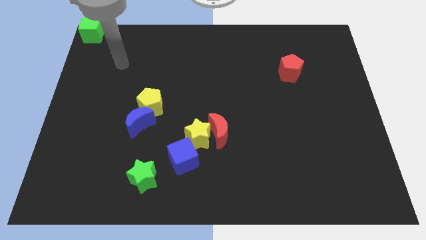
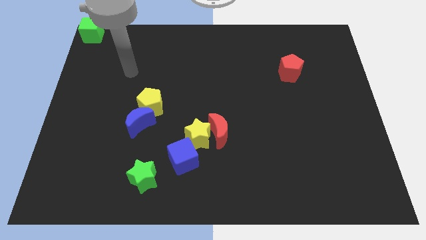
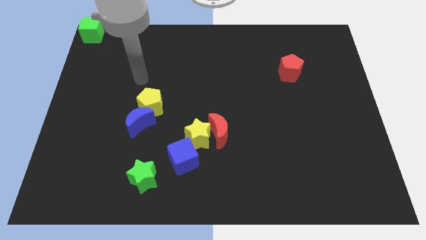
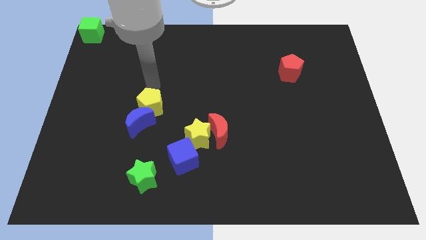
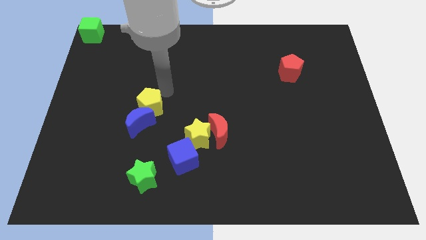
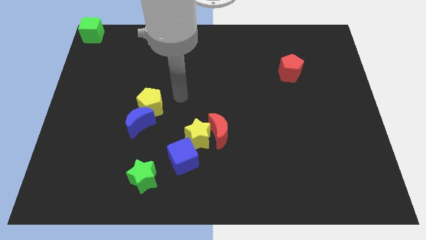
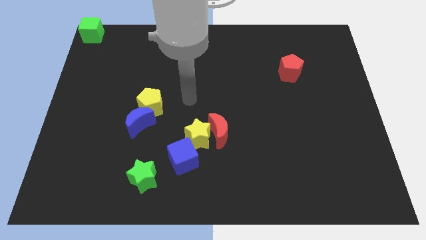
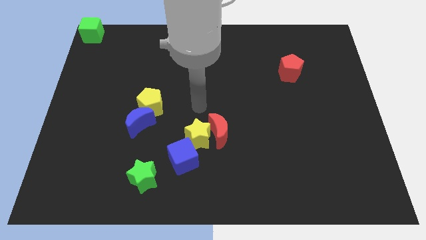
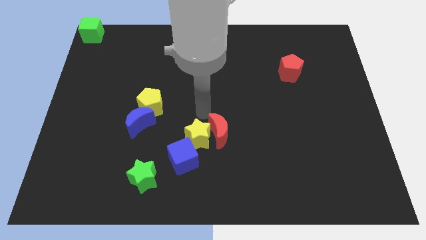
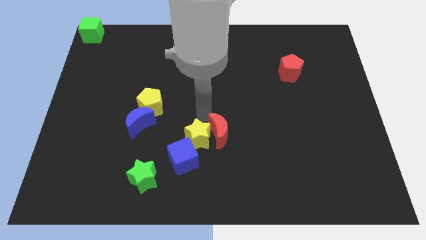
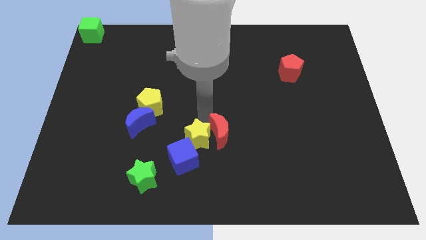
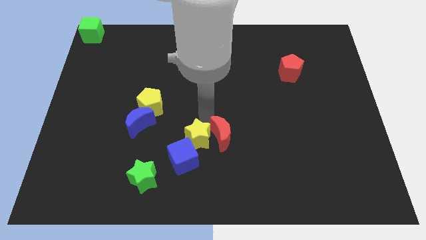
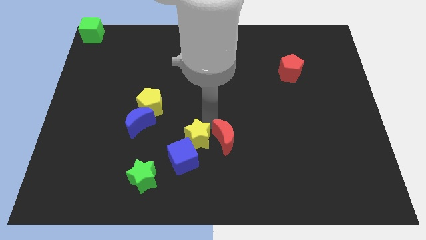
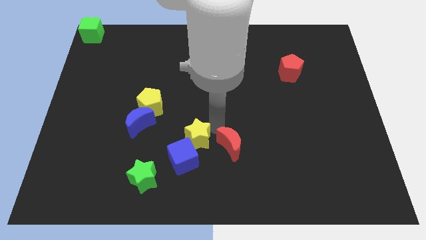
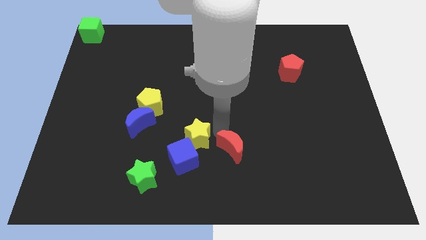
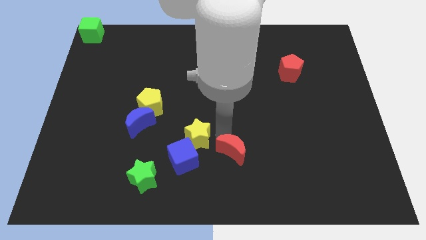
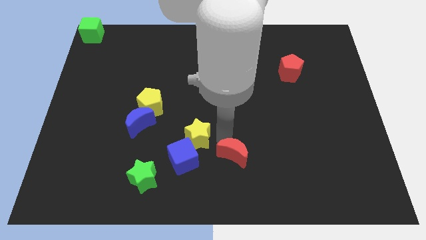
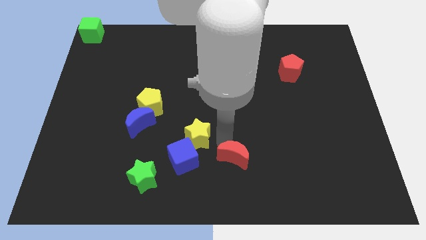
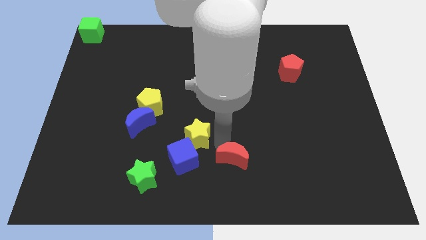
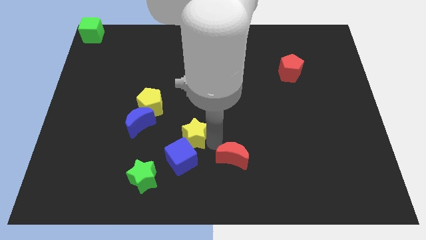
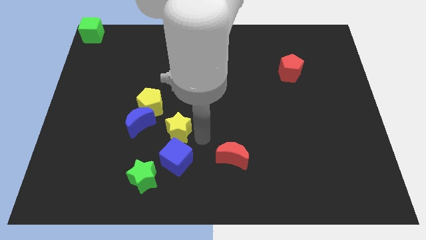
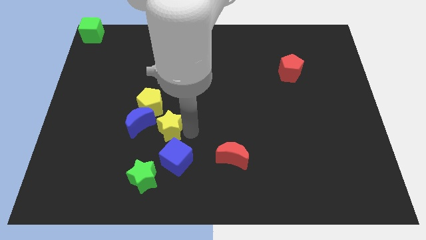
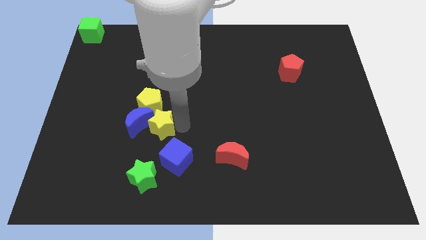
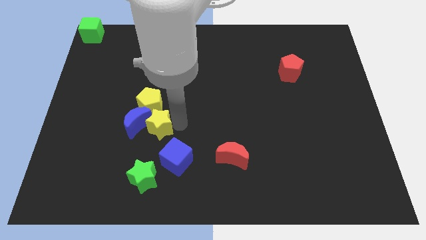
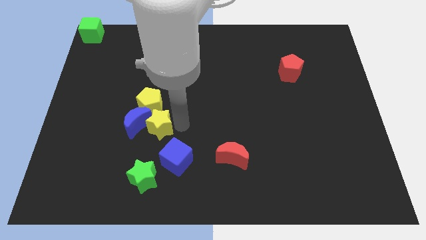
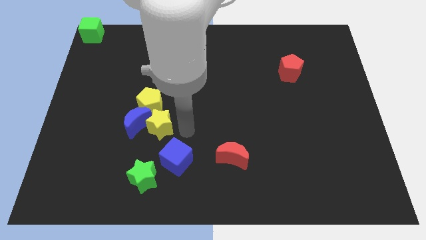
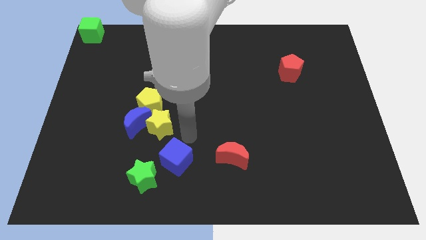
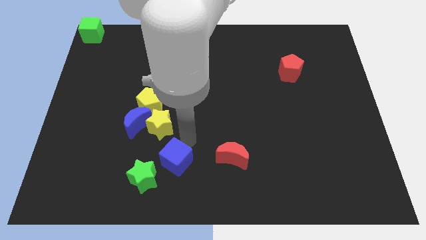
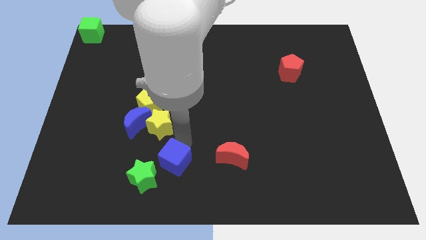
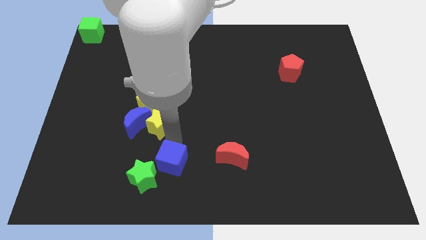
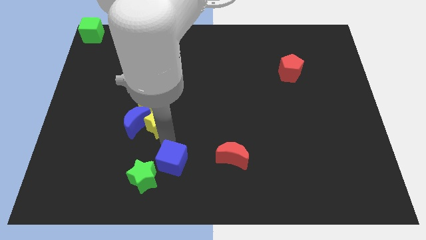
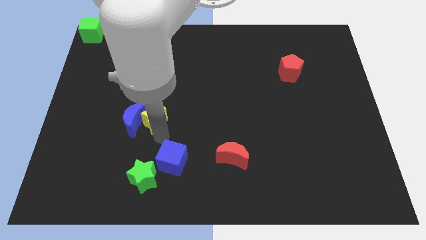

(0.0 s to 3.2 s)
move the red moon and the yellow star away from each other

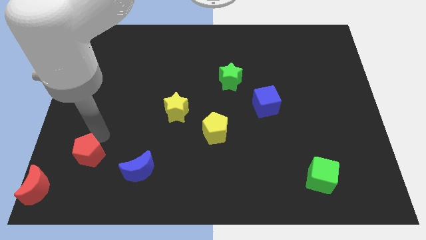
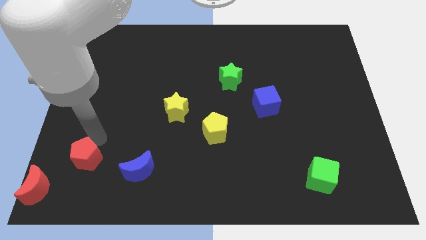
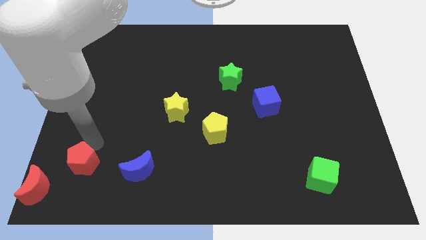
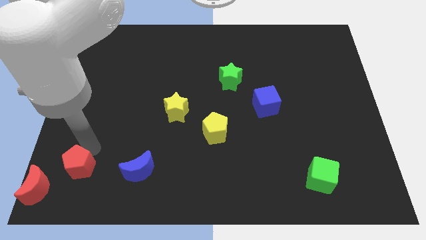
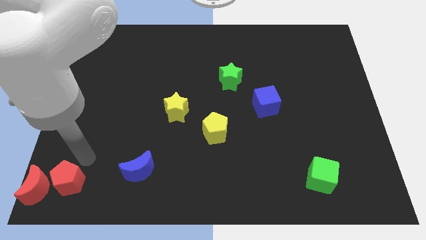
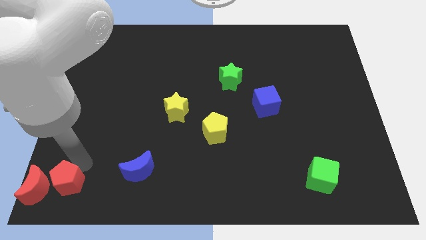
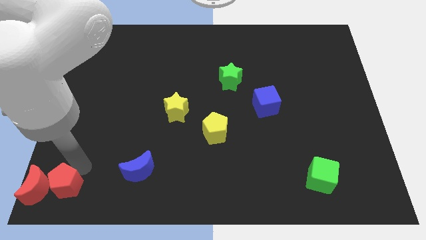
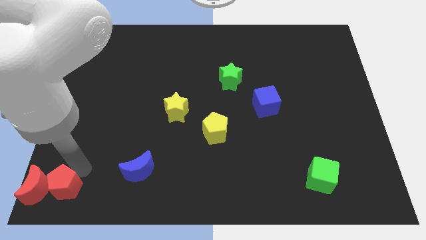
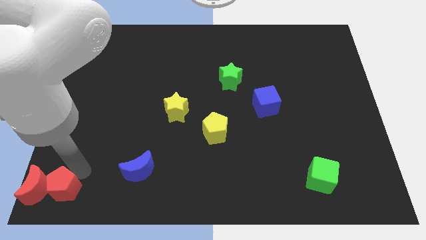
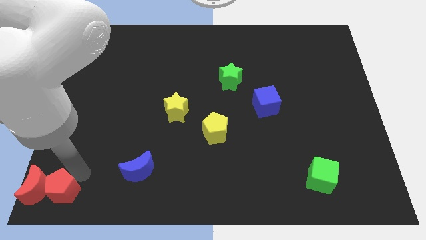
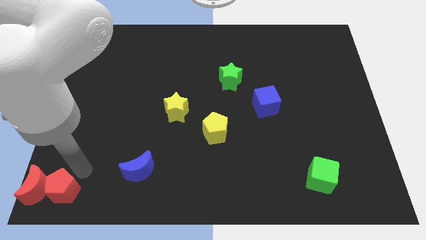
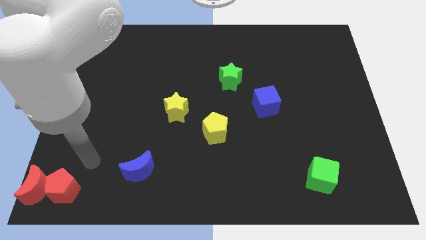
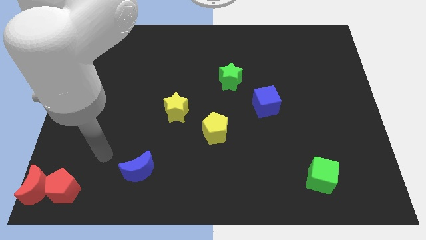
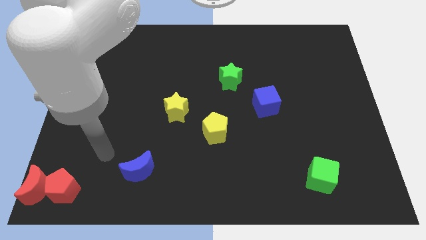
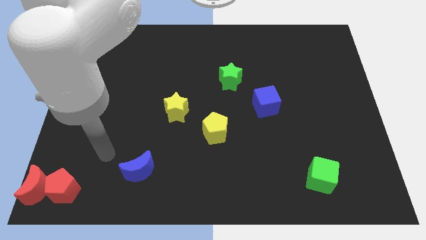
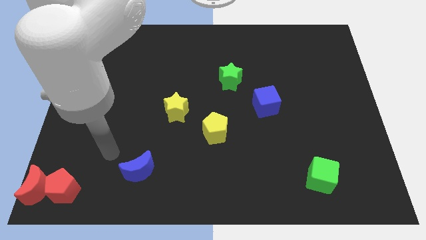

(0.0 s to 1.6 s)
place the red pentagon to the right side of the red moon

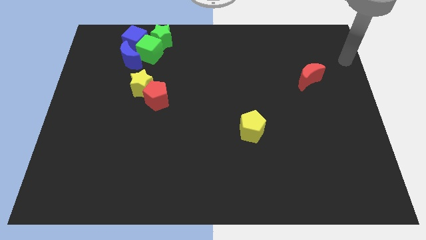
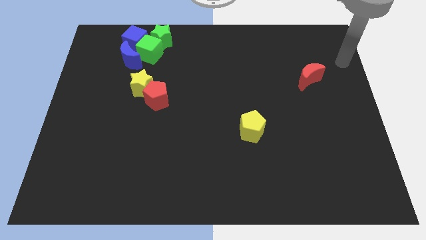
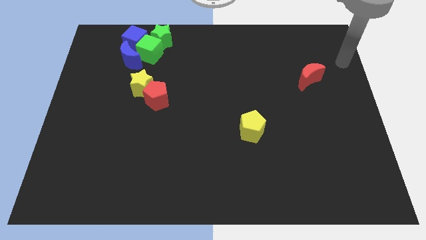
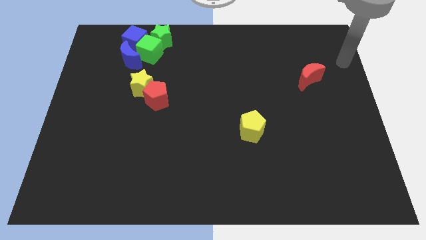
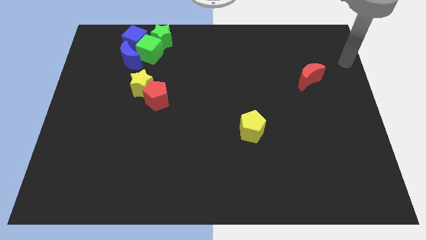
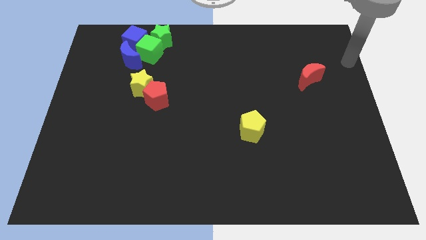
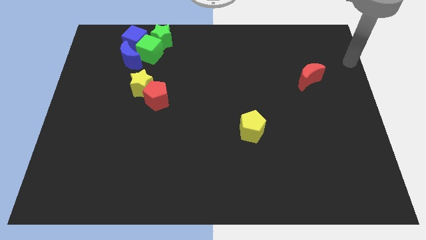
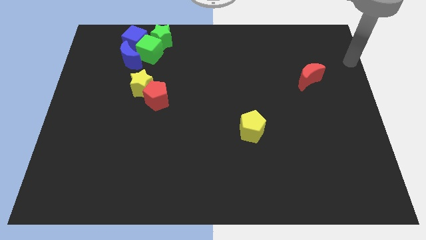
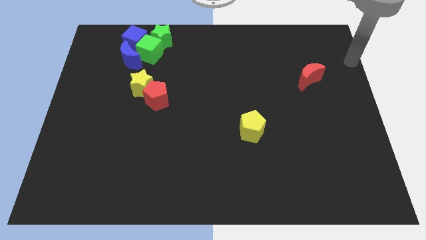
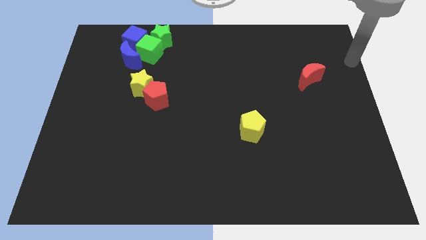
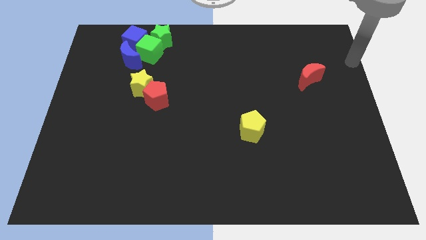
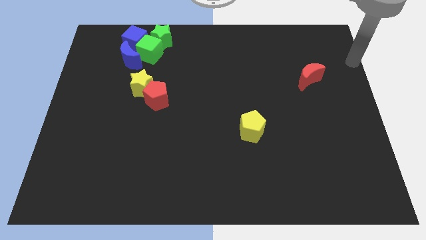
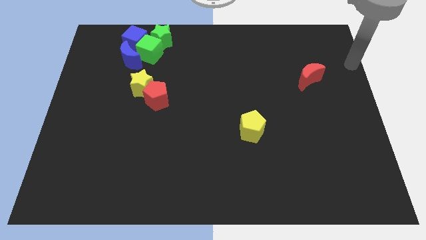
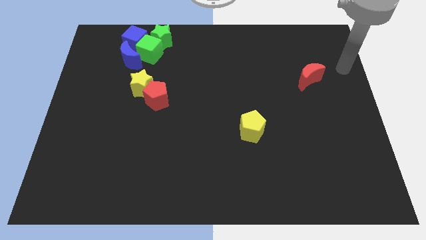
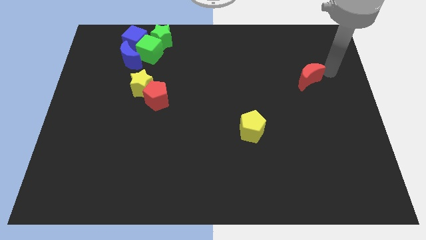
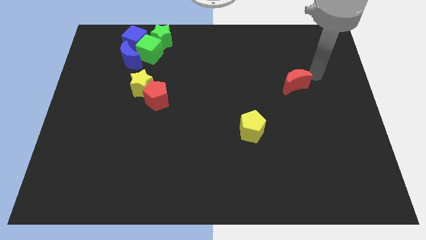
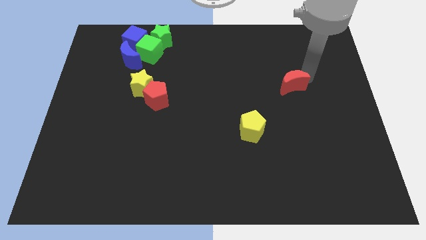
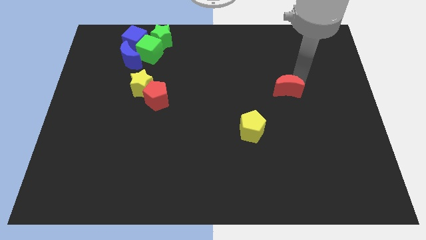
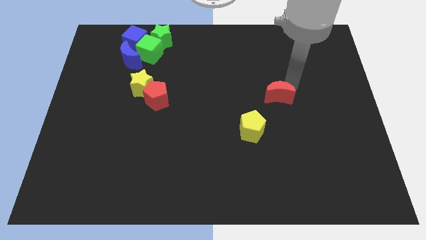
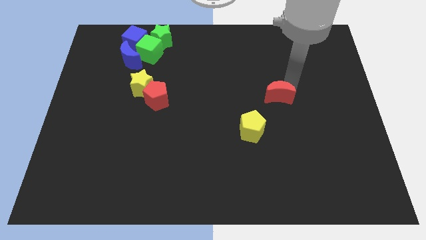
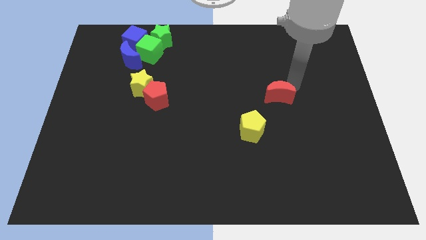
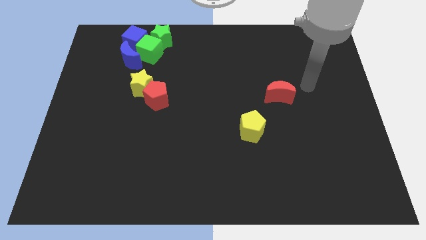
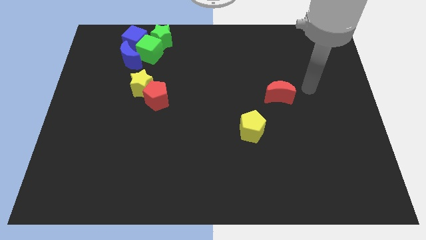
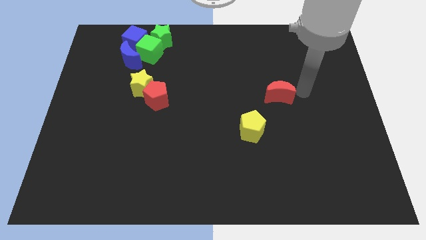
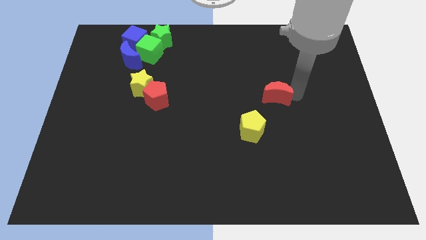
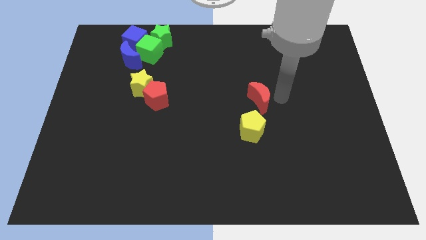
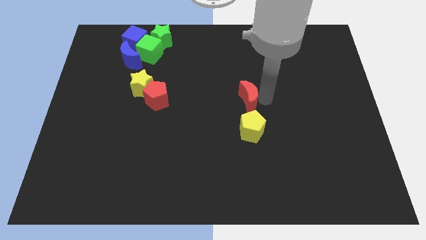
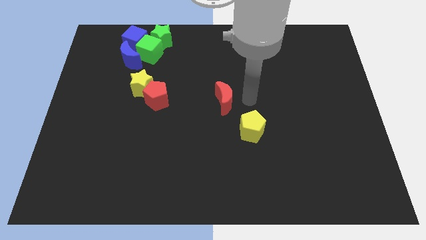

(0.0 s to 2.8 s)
place the red crescent above the yellow pentagon

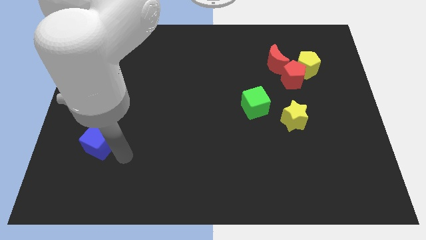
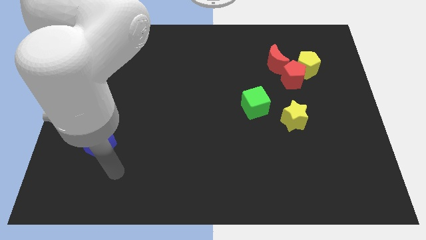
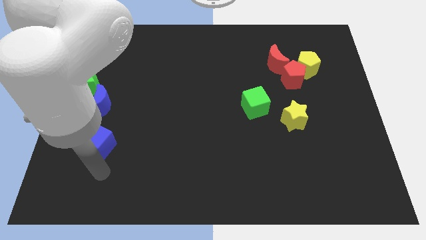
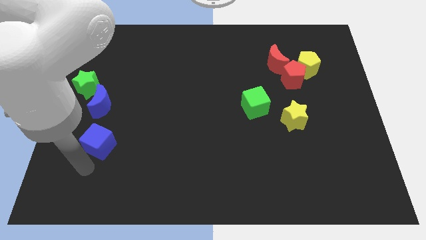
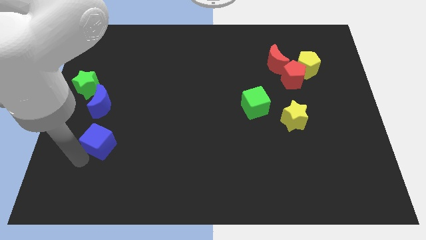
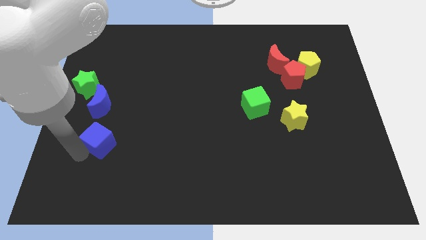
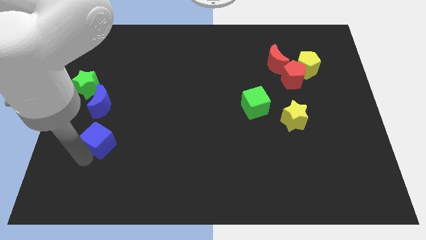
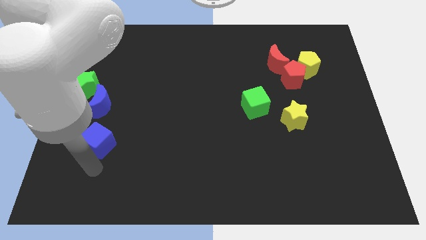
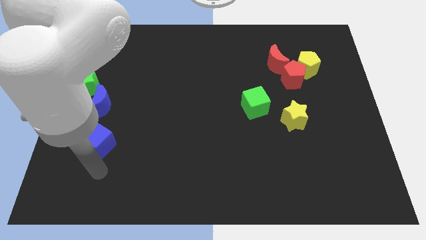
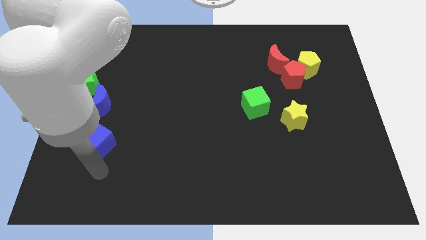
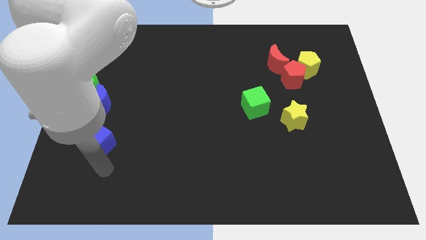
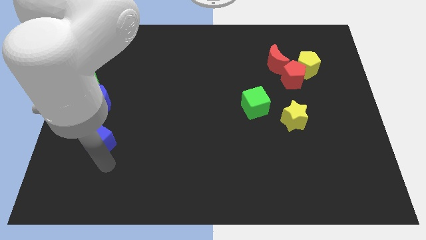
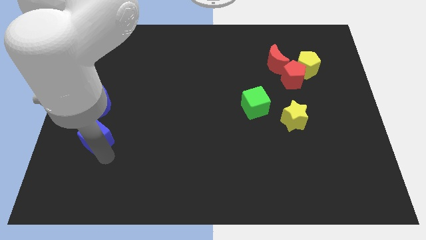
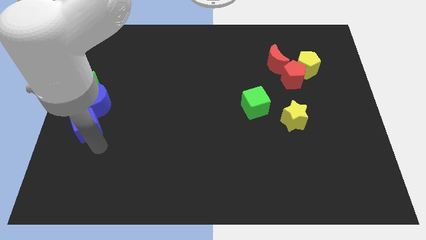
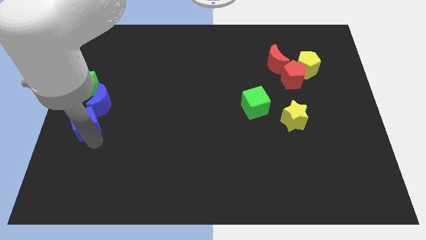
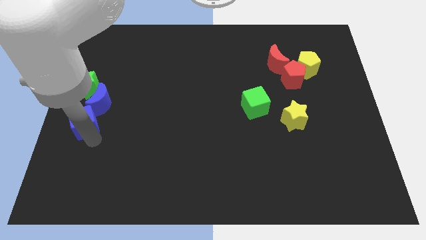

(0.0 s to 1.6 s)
place the blue cube at the bottom side of the blue cresent
